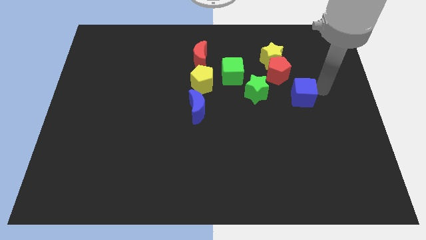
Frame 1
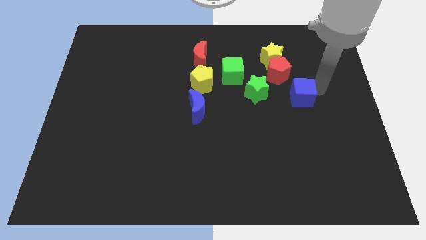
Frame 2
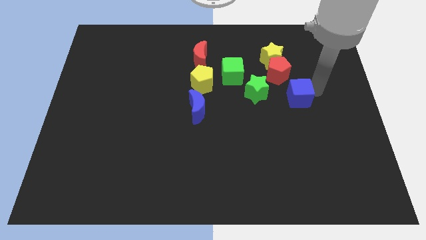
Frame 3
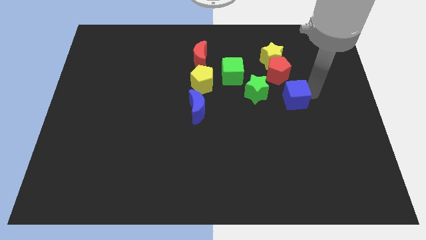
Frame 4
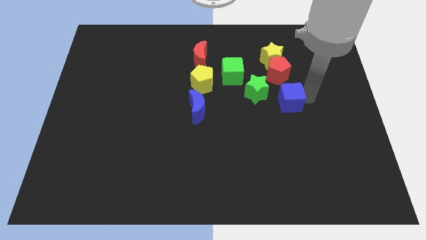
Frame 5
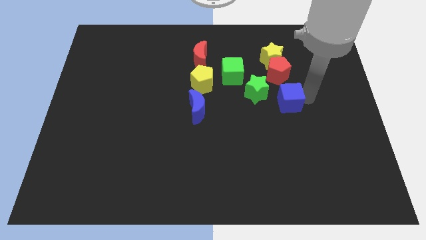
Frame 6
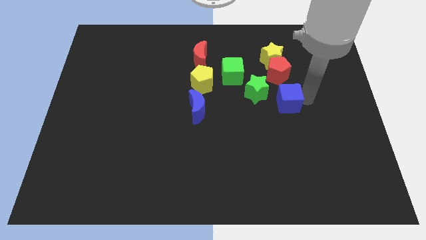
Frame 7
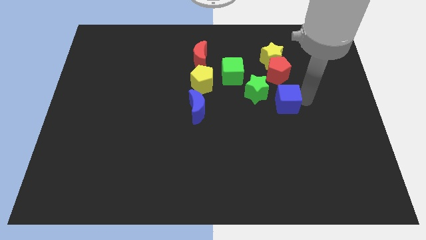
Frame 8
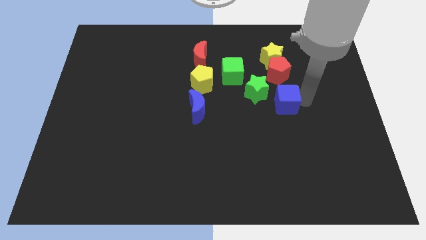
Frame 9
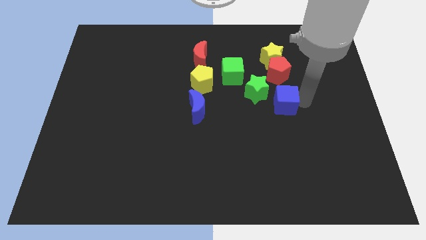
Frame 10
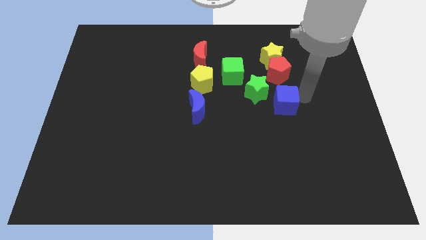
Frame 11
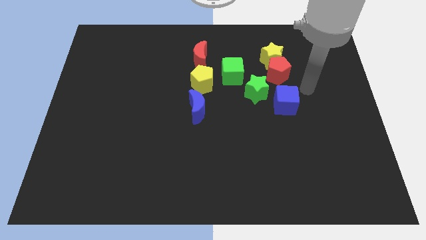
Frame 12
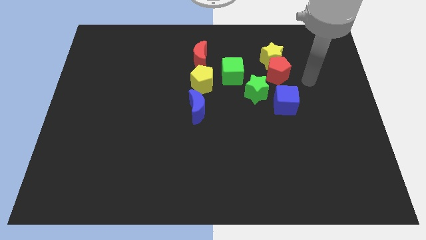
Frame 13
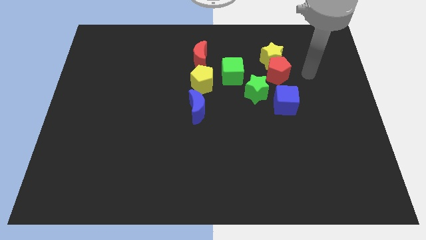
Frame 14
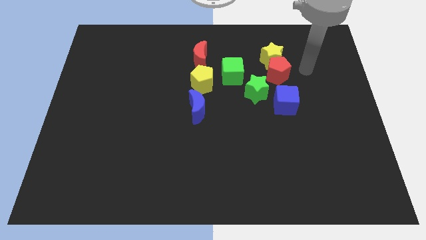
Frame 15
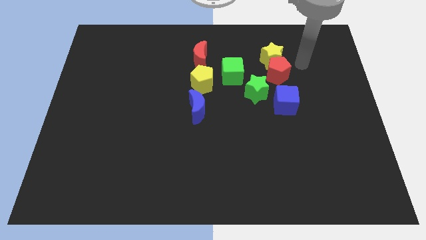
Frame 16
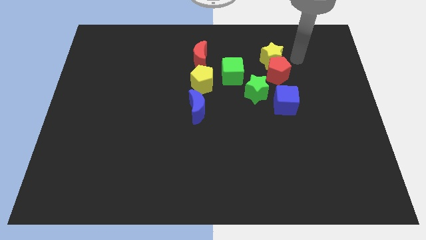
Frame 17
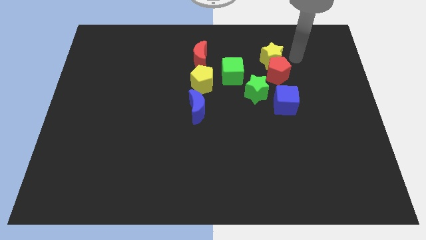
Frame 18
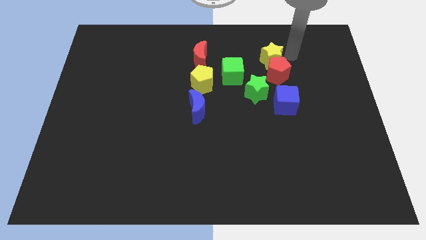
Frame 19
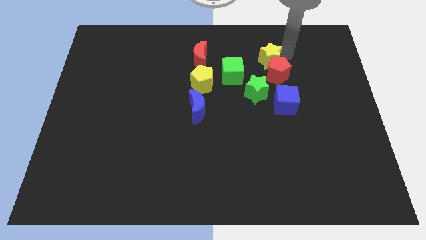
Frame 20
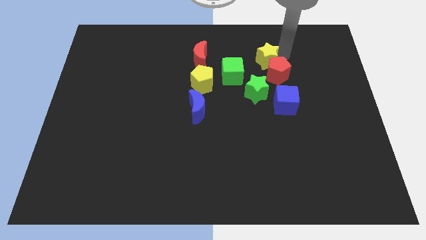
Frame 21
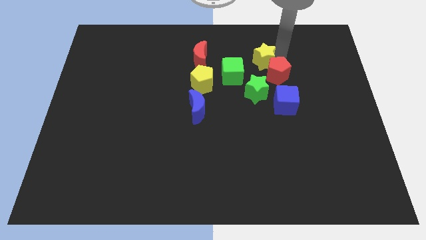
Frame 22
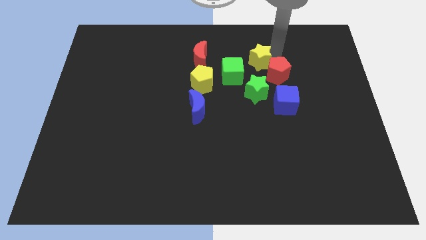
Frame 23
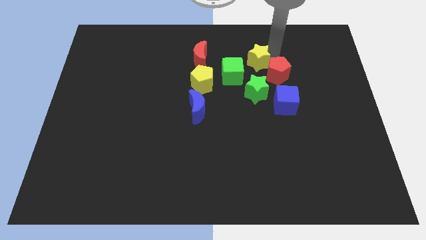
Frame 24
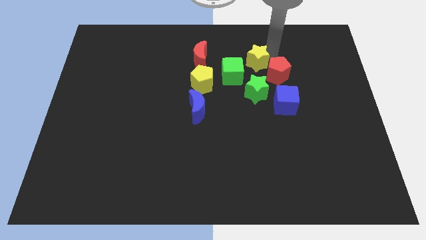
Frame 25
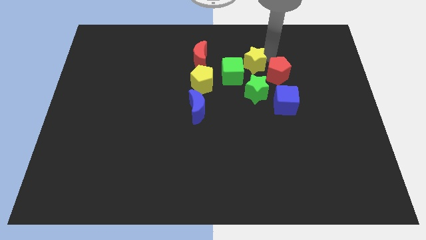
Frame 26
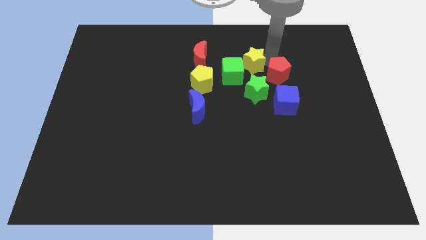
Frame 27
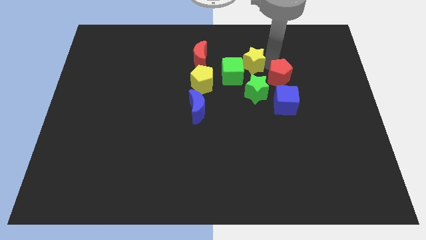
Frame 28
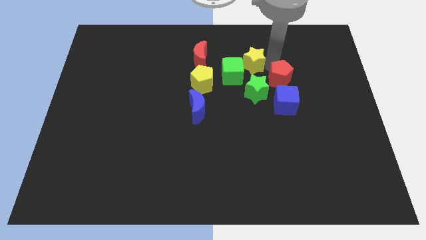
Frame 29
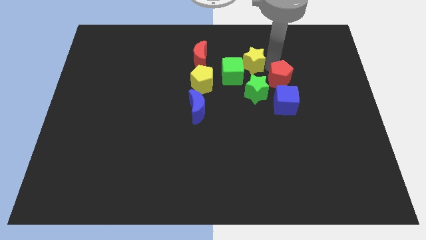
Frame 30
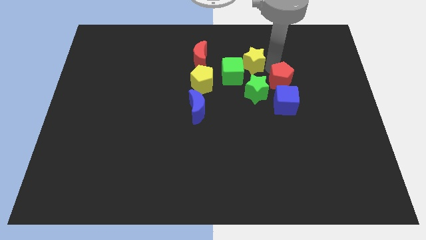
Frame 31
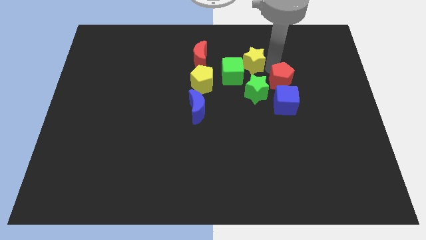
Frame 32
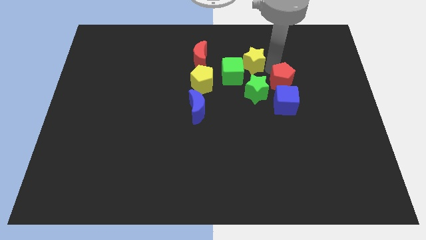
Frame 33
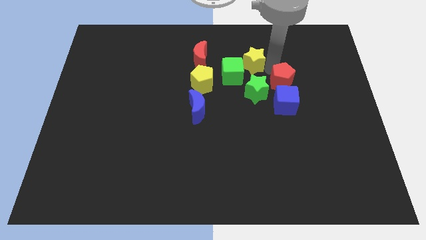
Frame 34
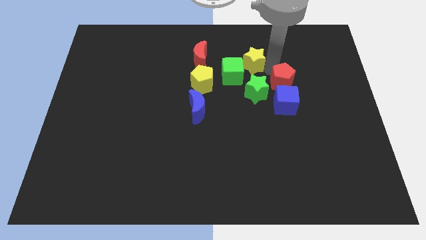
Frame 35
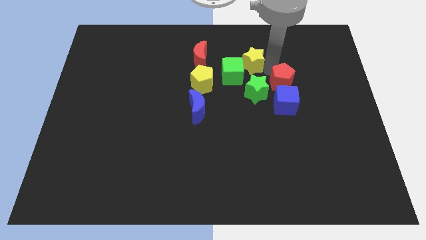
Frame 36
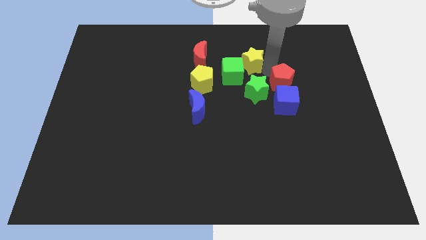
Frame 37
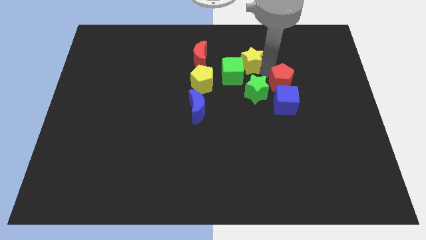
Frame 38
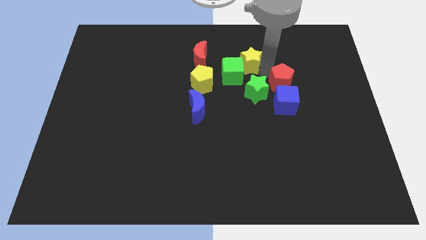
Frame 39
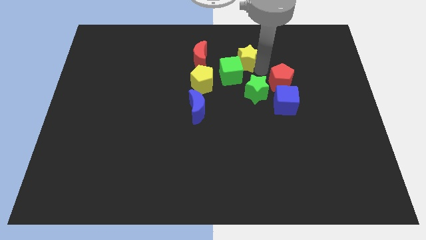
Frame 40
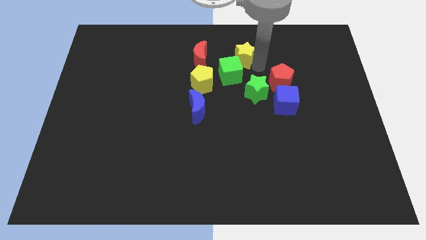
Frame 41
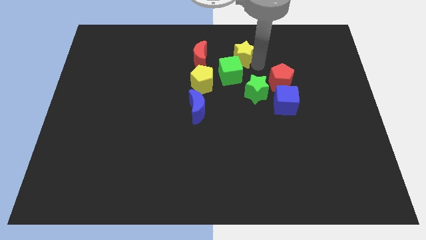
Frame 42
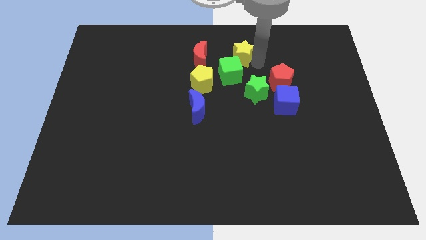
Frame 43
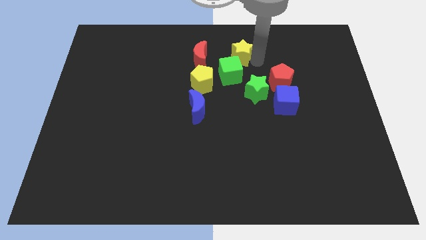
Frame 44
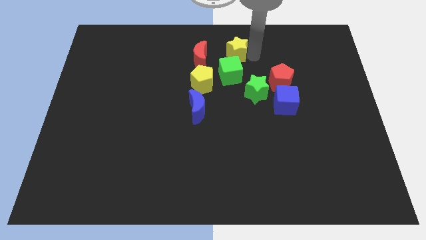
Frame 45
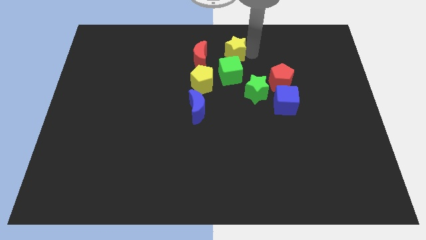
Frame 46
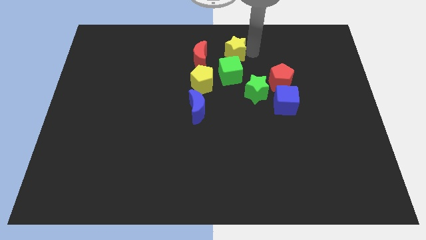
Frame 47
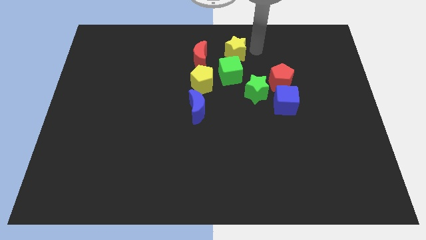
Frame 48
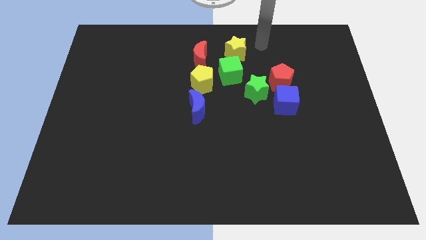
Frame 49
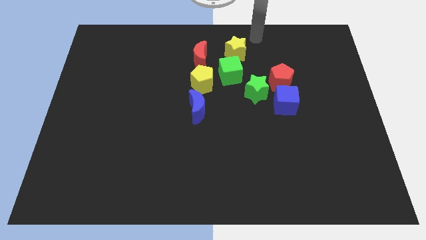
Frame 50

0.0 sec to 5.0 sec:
place the yellow star above the green cube

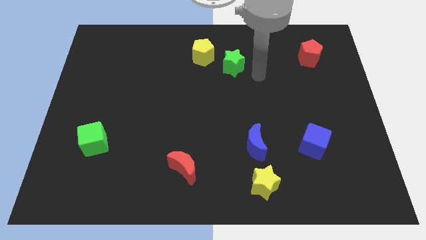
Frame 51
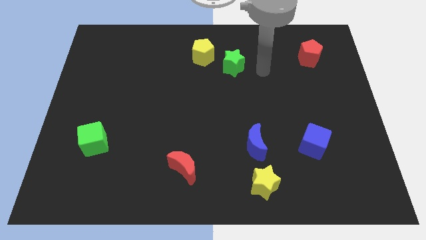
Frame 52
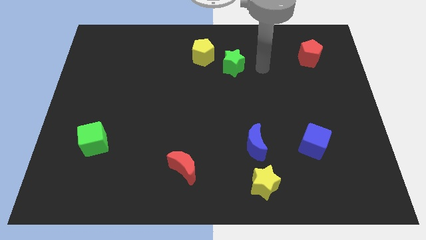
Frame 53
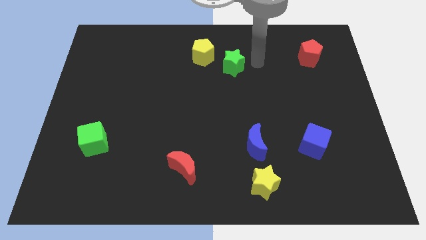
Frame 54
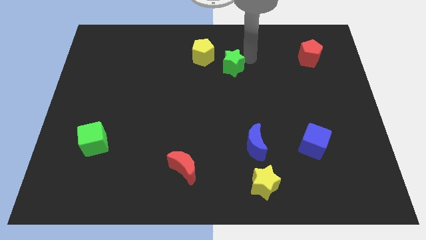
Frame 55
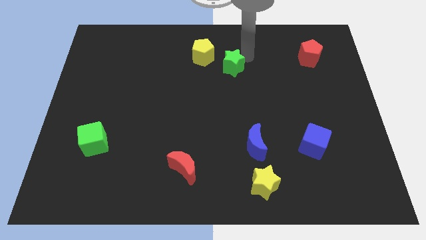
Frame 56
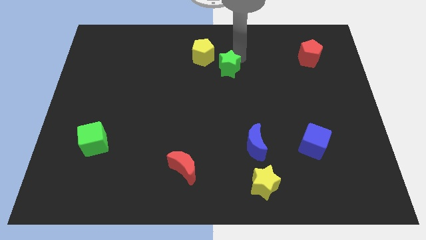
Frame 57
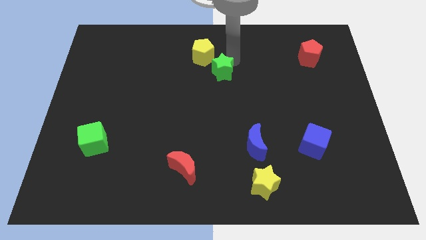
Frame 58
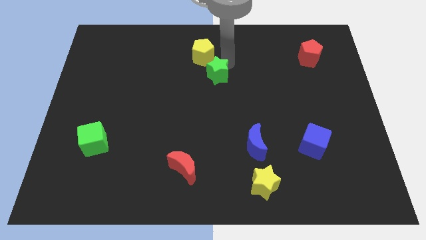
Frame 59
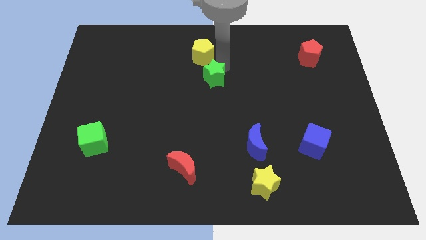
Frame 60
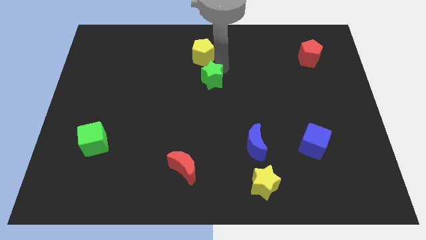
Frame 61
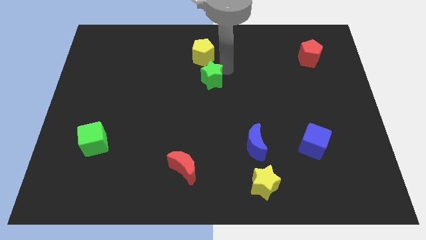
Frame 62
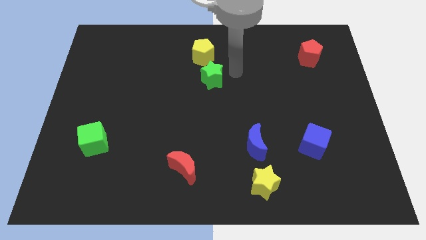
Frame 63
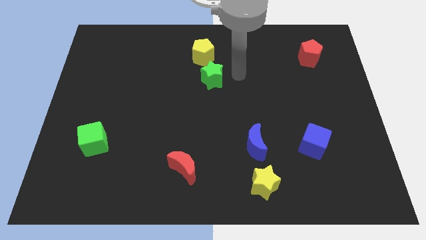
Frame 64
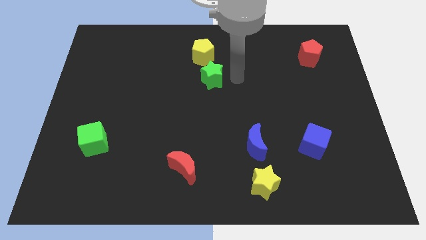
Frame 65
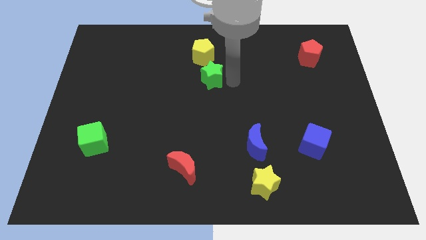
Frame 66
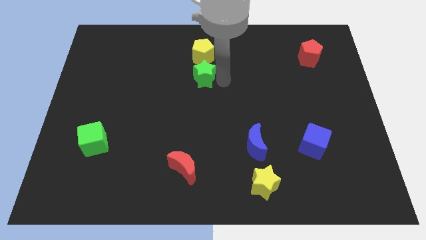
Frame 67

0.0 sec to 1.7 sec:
push the green star below the yellow pentagon

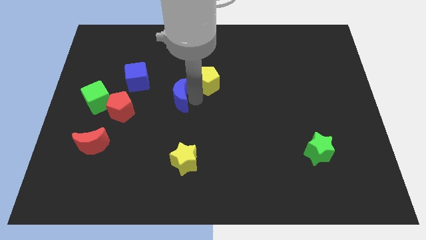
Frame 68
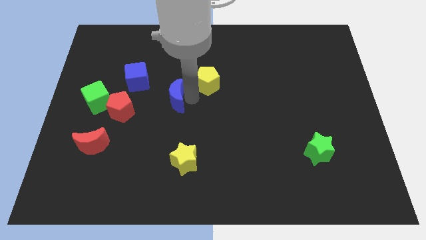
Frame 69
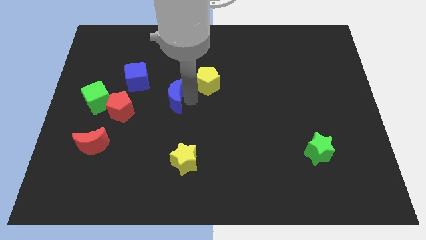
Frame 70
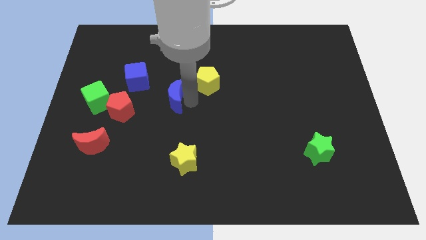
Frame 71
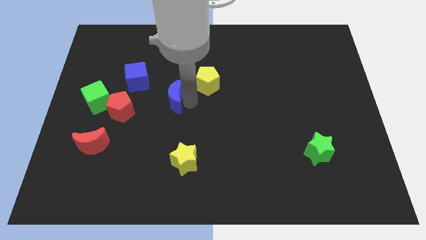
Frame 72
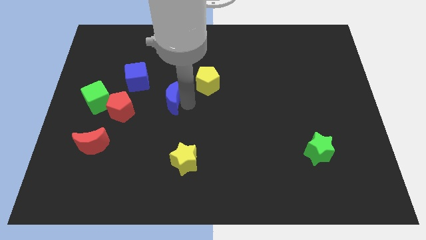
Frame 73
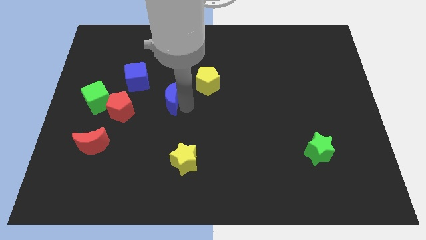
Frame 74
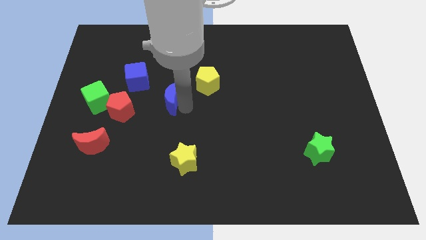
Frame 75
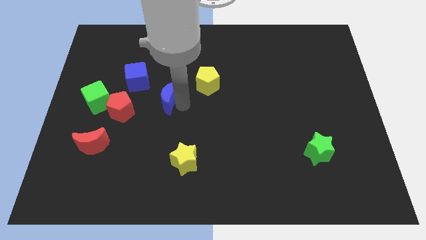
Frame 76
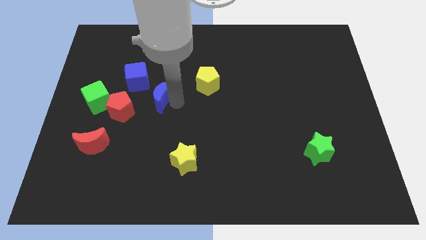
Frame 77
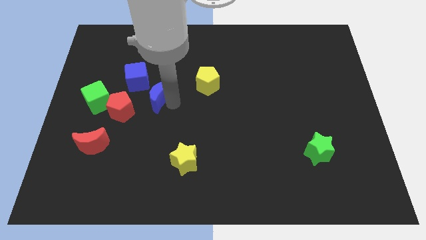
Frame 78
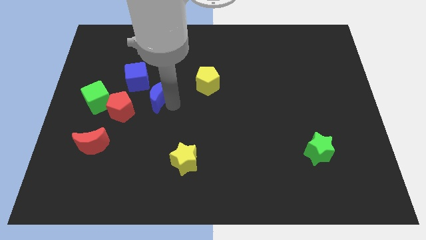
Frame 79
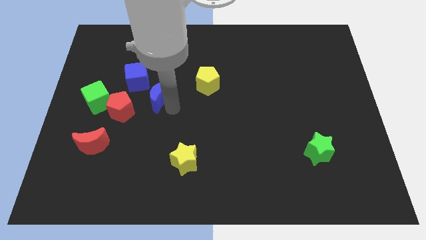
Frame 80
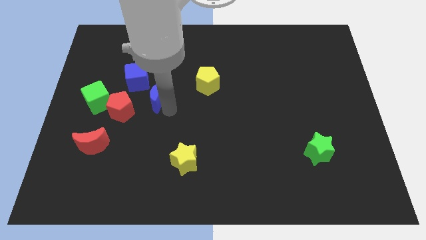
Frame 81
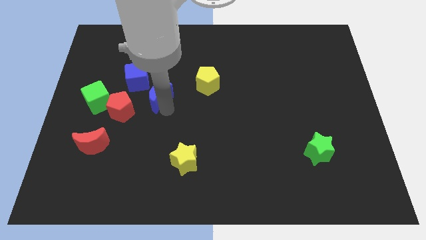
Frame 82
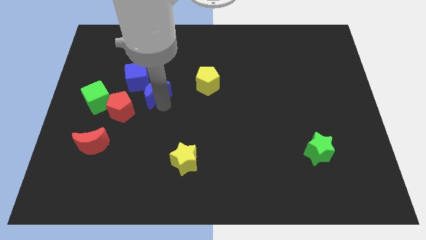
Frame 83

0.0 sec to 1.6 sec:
push the blue crescent towards the blue cube

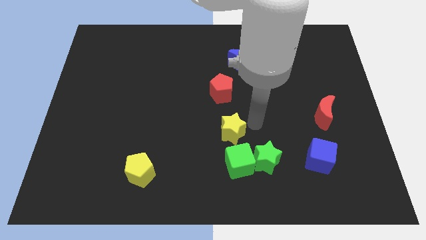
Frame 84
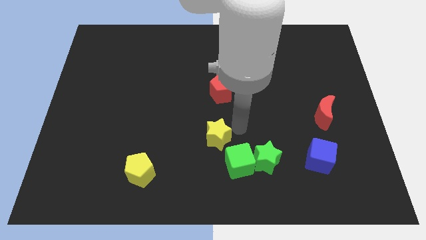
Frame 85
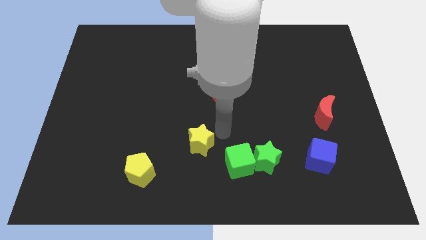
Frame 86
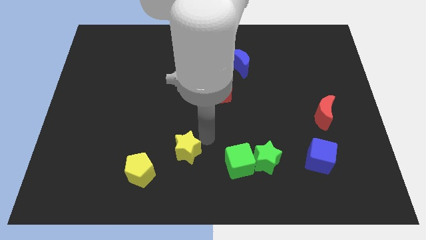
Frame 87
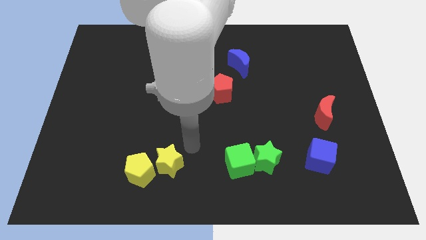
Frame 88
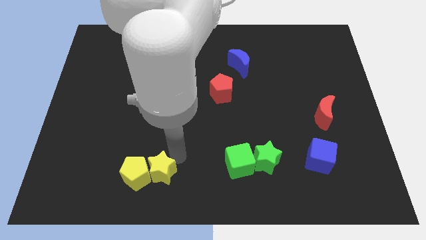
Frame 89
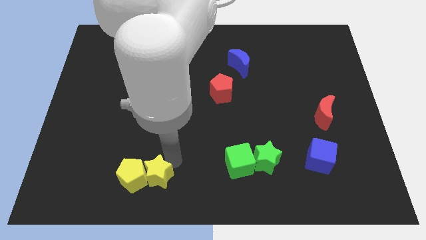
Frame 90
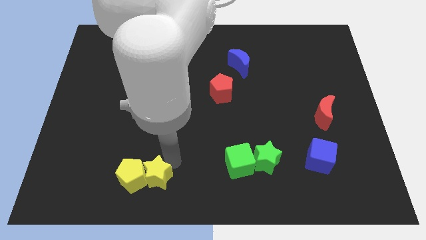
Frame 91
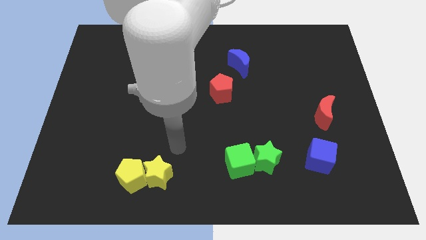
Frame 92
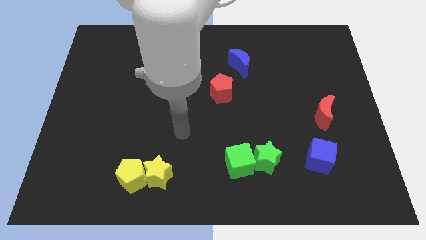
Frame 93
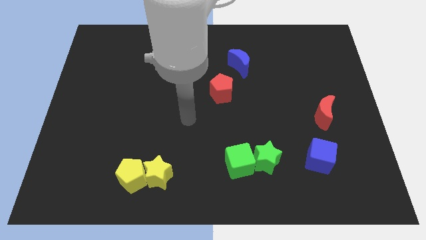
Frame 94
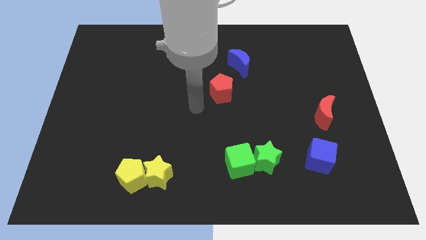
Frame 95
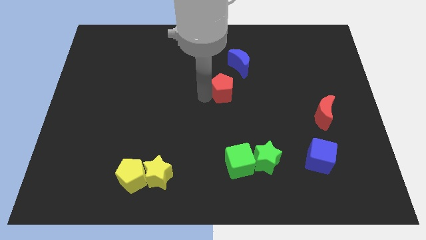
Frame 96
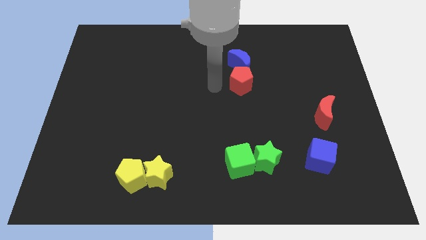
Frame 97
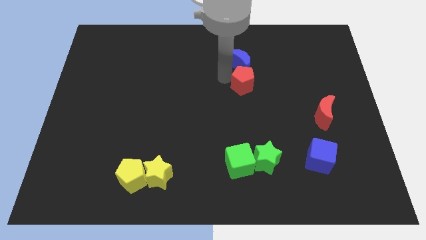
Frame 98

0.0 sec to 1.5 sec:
place the yellow star at right side of the yellow pentagon
